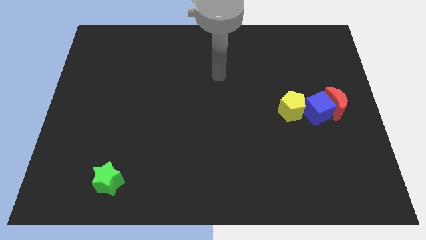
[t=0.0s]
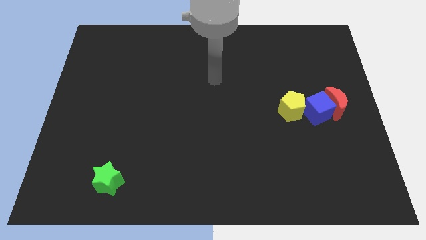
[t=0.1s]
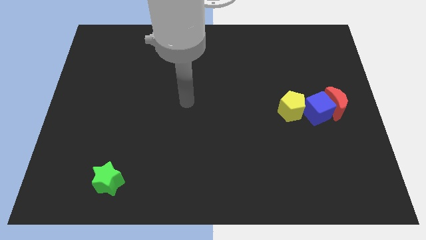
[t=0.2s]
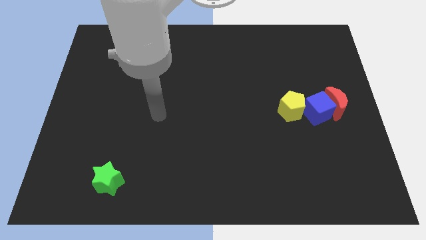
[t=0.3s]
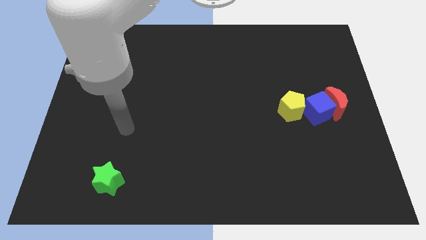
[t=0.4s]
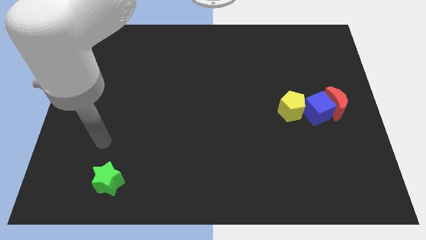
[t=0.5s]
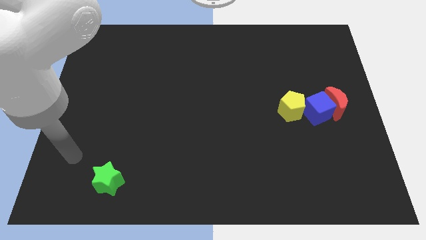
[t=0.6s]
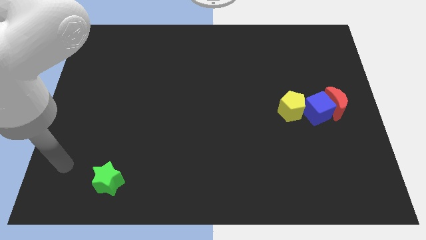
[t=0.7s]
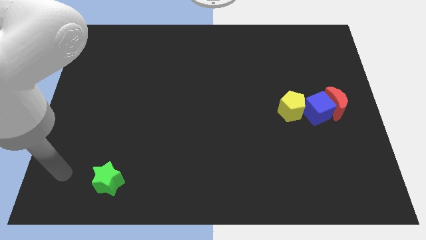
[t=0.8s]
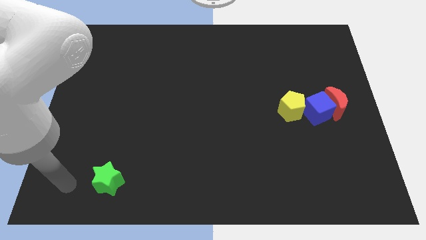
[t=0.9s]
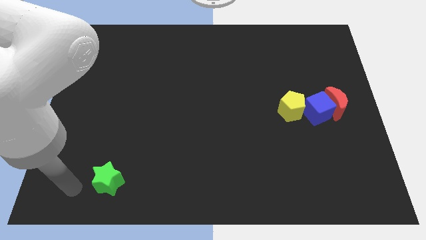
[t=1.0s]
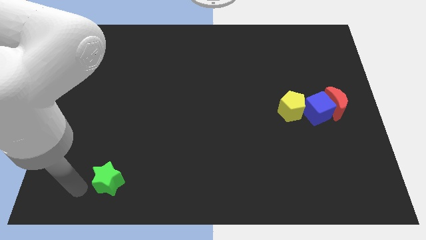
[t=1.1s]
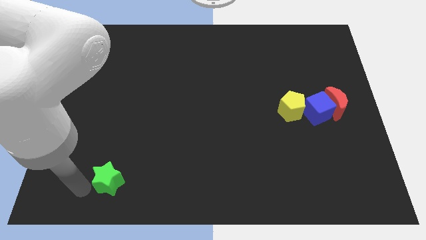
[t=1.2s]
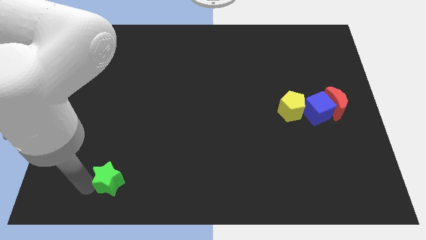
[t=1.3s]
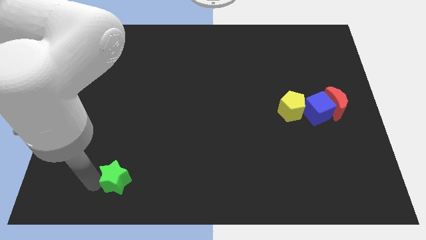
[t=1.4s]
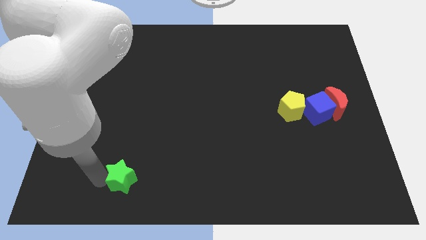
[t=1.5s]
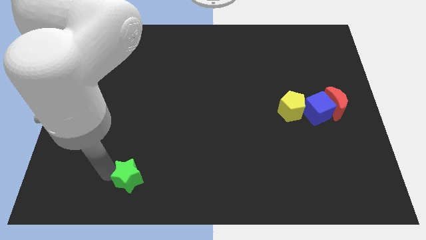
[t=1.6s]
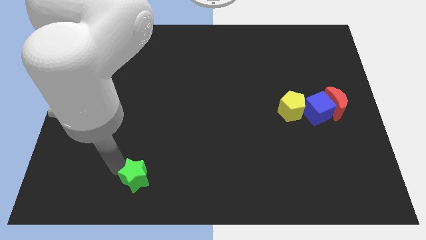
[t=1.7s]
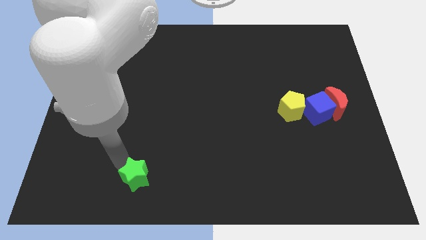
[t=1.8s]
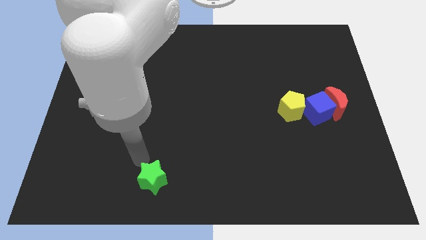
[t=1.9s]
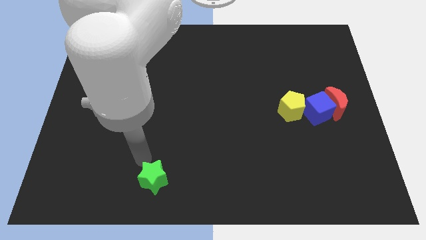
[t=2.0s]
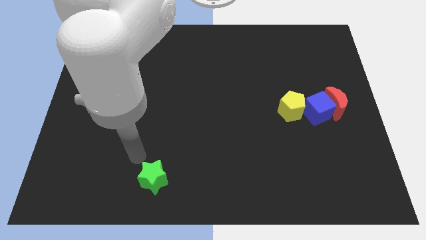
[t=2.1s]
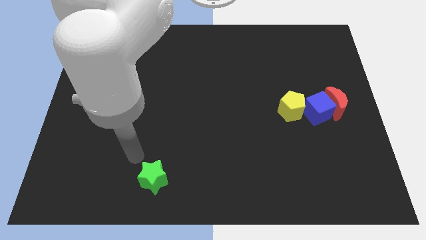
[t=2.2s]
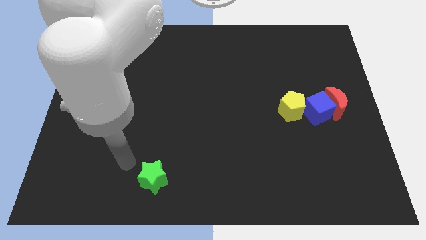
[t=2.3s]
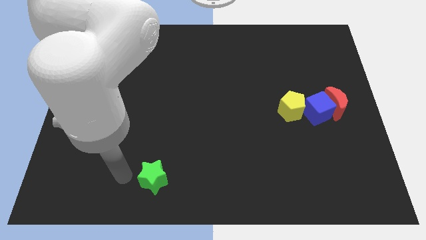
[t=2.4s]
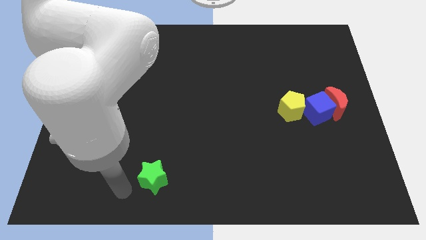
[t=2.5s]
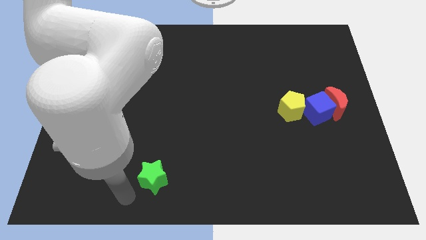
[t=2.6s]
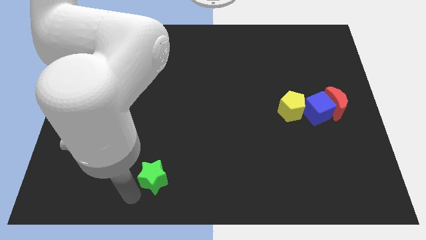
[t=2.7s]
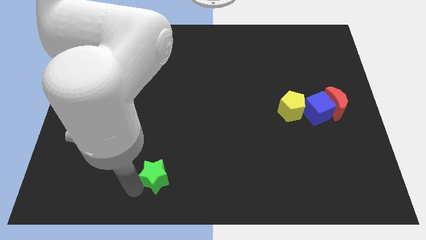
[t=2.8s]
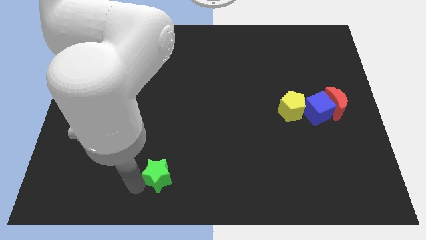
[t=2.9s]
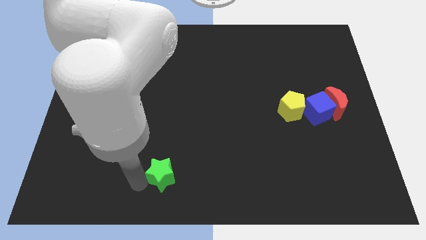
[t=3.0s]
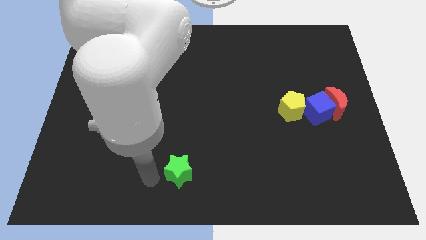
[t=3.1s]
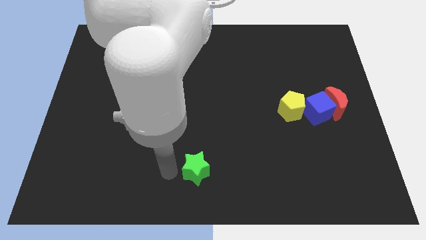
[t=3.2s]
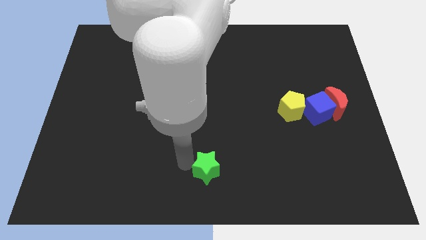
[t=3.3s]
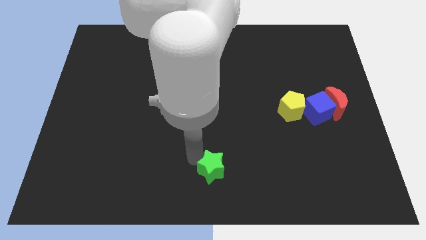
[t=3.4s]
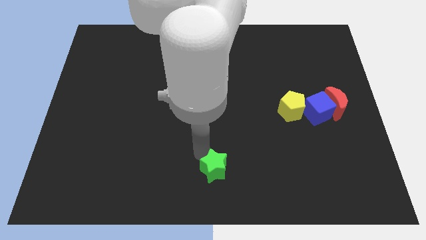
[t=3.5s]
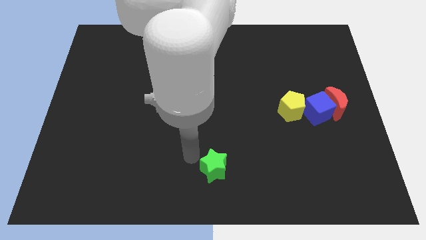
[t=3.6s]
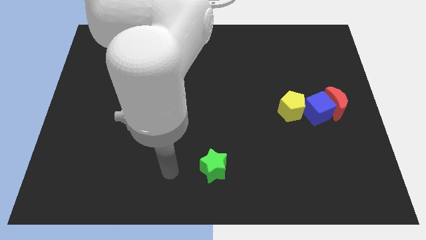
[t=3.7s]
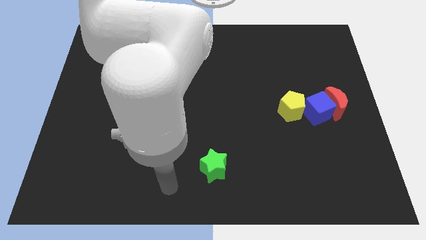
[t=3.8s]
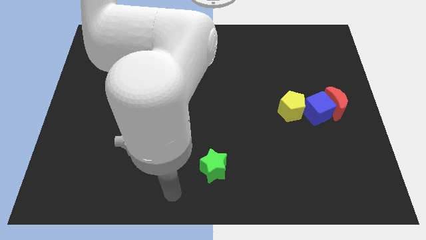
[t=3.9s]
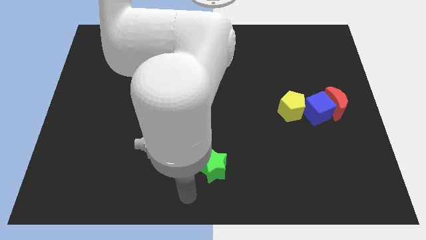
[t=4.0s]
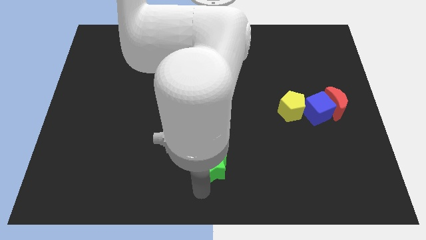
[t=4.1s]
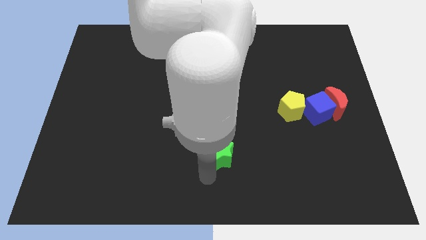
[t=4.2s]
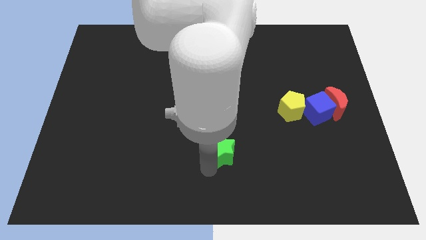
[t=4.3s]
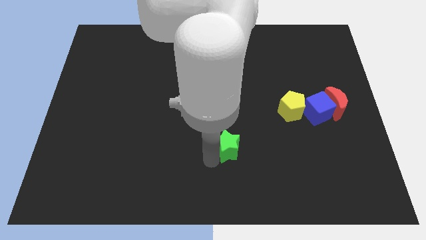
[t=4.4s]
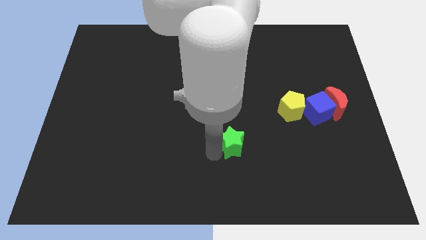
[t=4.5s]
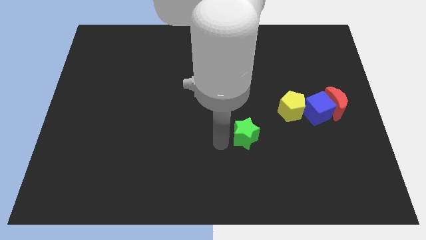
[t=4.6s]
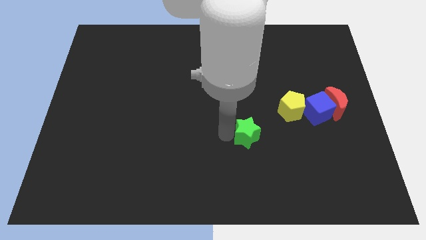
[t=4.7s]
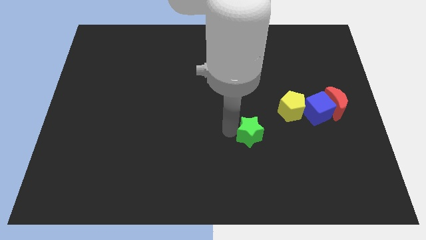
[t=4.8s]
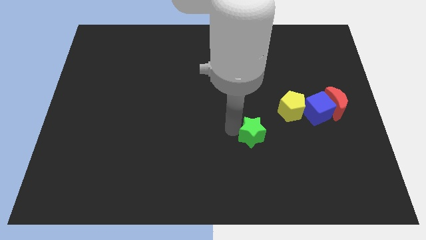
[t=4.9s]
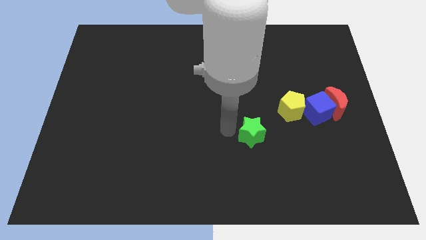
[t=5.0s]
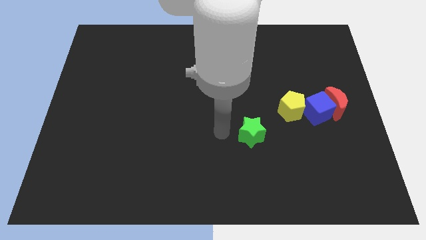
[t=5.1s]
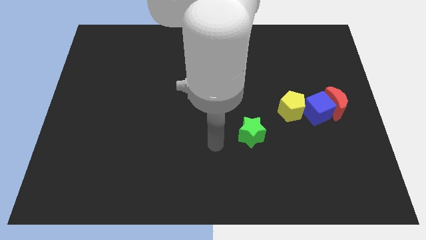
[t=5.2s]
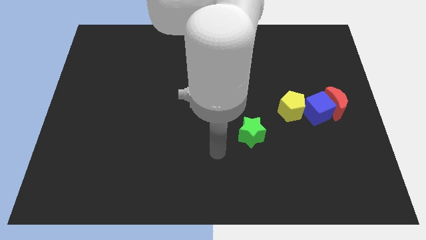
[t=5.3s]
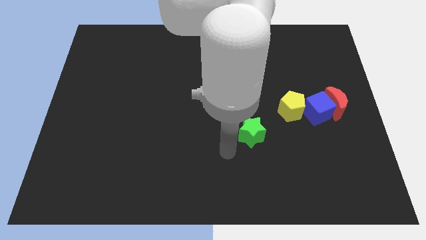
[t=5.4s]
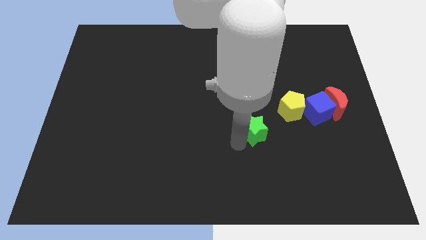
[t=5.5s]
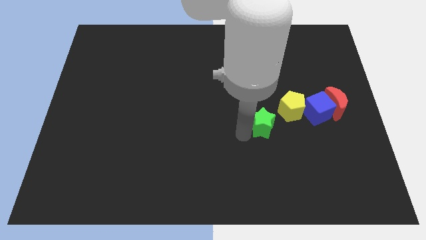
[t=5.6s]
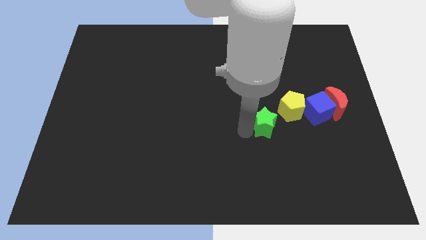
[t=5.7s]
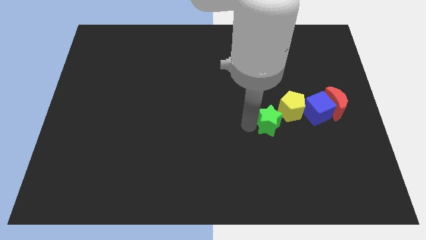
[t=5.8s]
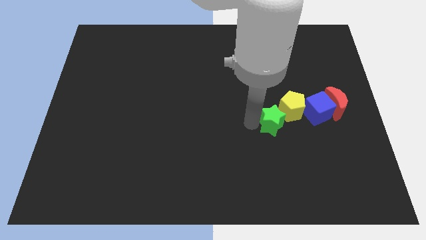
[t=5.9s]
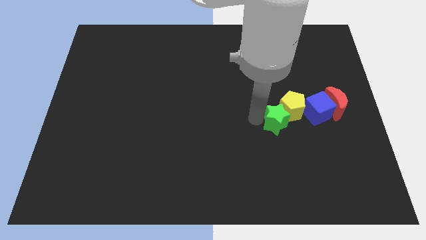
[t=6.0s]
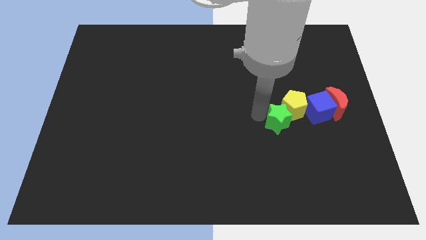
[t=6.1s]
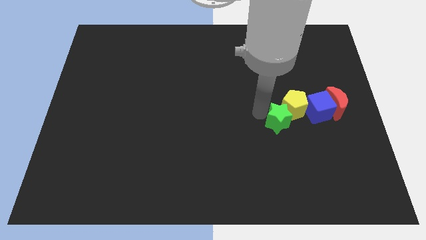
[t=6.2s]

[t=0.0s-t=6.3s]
put the green block next to the yellow pentagon

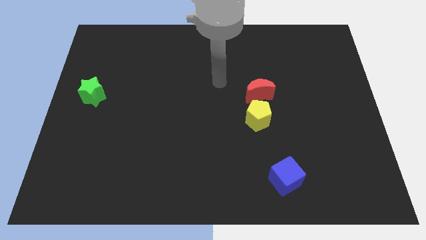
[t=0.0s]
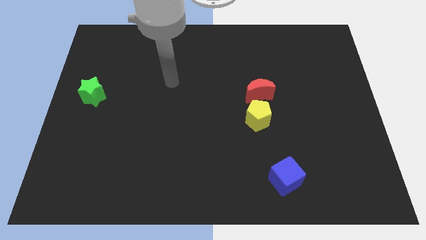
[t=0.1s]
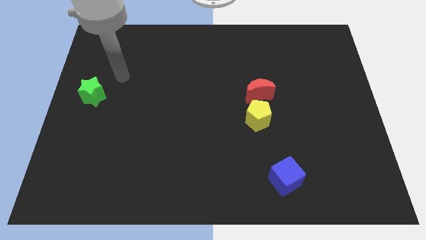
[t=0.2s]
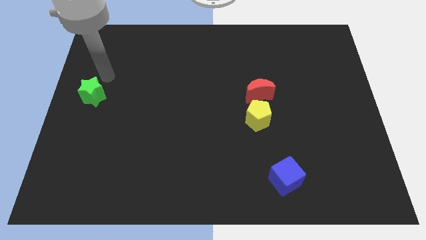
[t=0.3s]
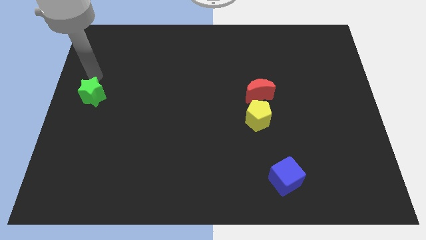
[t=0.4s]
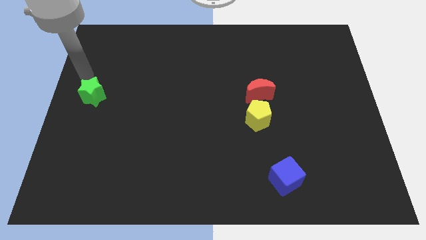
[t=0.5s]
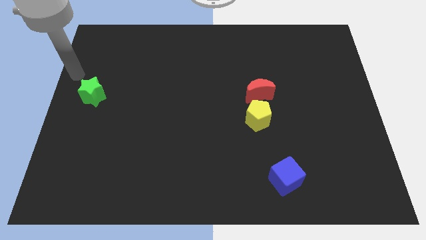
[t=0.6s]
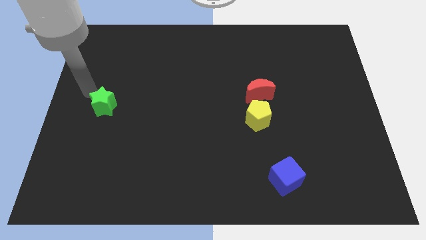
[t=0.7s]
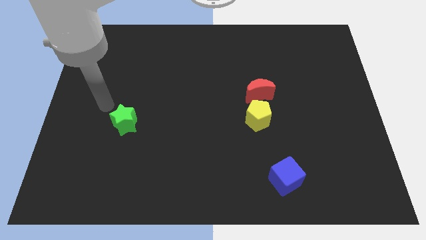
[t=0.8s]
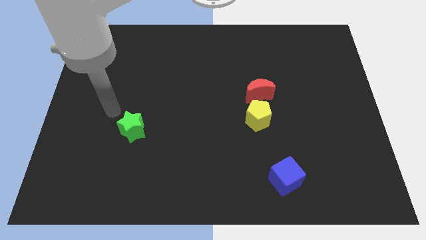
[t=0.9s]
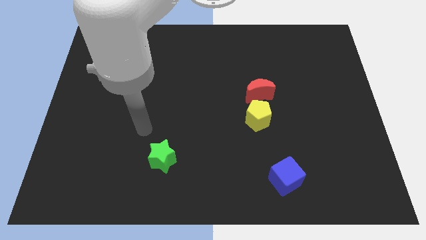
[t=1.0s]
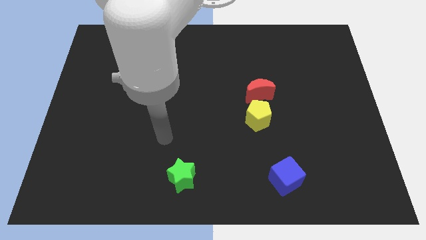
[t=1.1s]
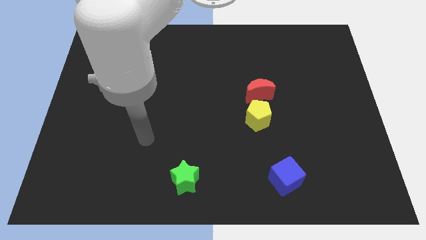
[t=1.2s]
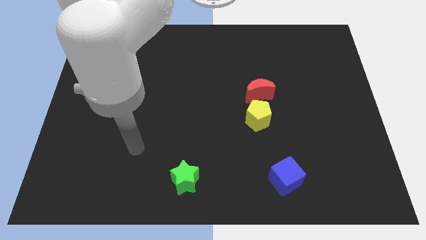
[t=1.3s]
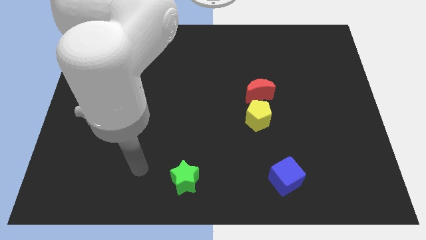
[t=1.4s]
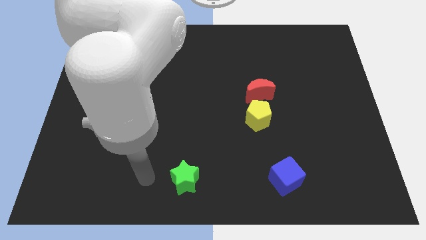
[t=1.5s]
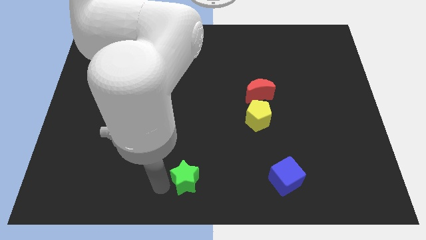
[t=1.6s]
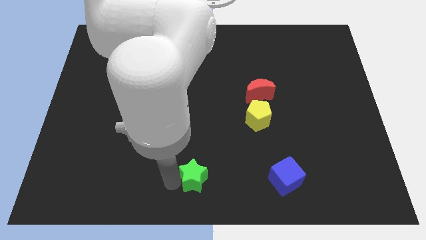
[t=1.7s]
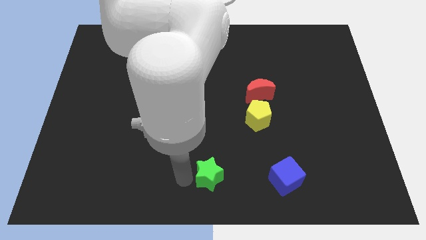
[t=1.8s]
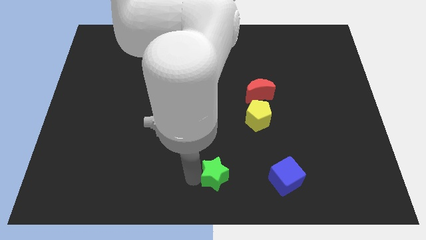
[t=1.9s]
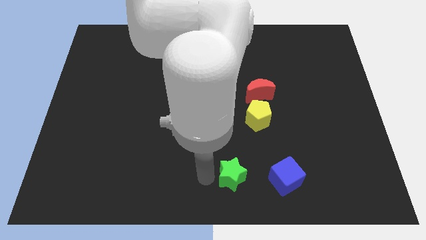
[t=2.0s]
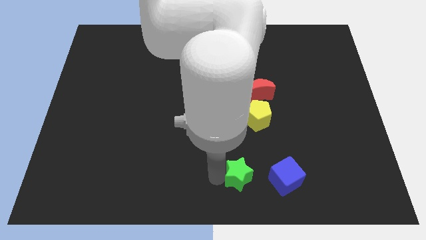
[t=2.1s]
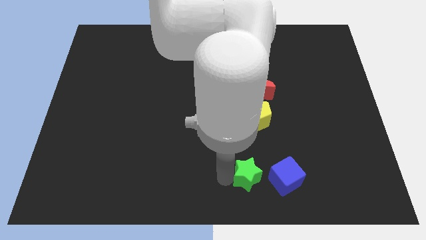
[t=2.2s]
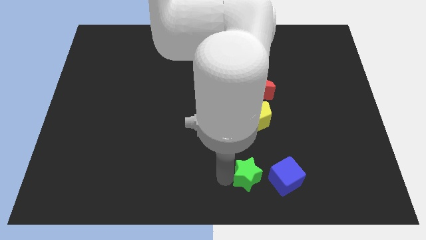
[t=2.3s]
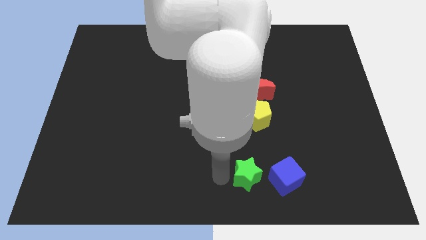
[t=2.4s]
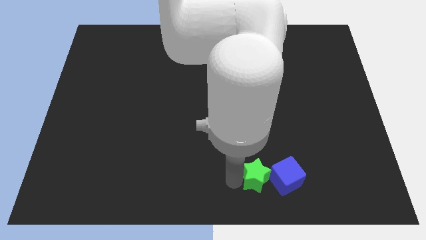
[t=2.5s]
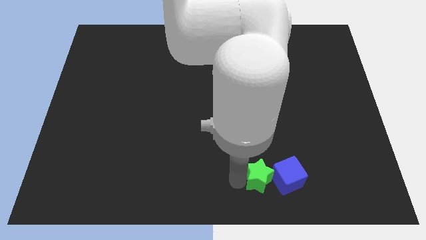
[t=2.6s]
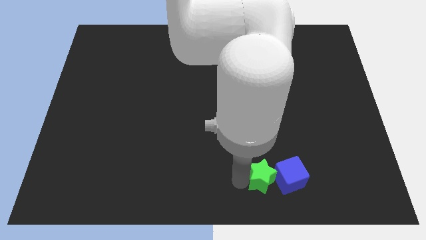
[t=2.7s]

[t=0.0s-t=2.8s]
move the green block to the blue cube
